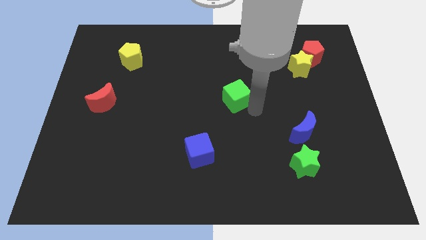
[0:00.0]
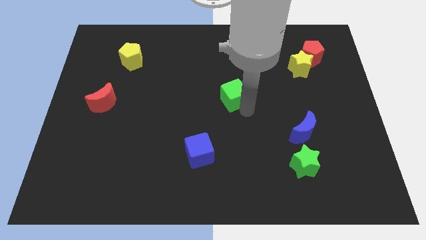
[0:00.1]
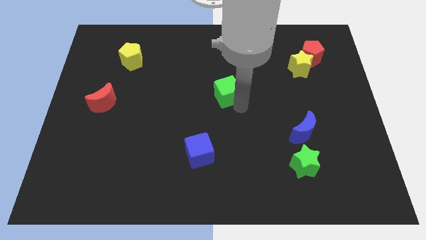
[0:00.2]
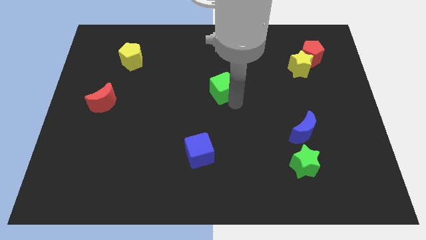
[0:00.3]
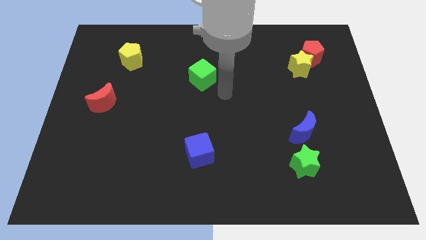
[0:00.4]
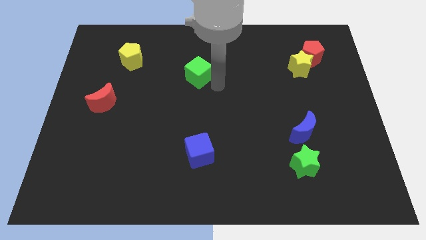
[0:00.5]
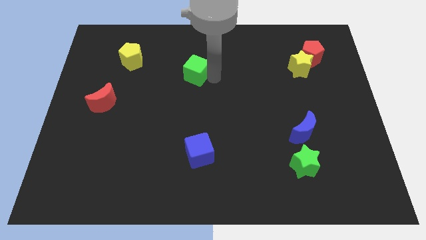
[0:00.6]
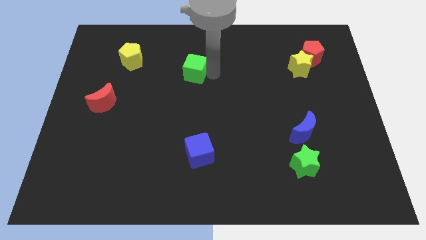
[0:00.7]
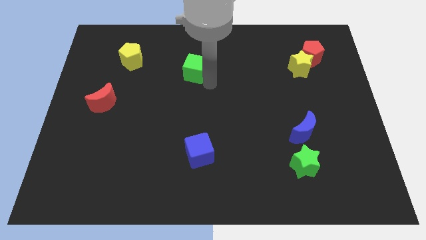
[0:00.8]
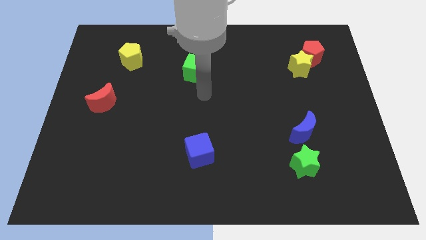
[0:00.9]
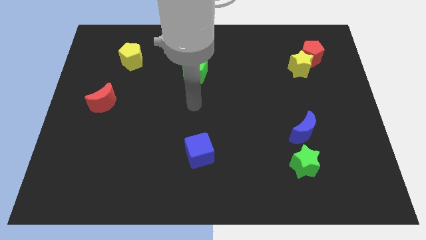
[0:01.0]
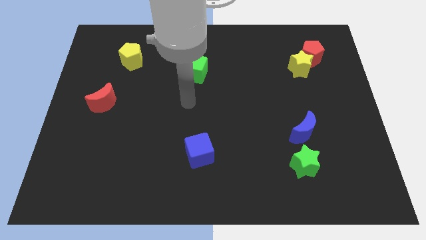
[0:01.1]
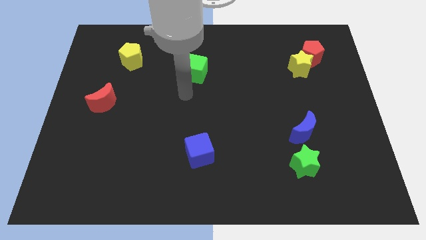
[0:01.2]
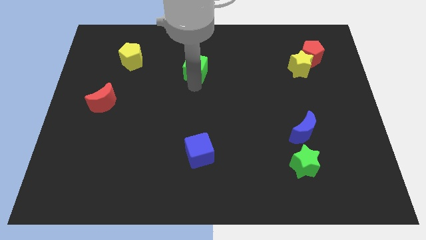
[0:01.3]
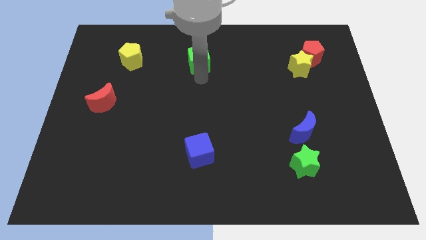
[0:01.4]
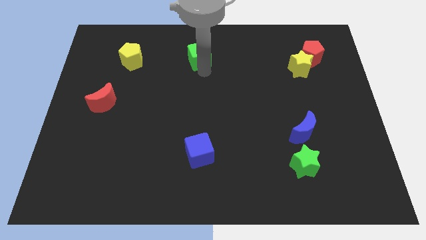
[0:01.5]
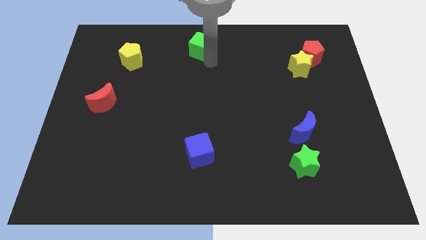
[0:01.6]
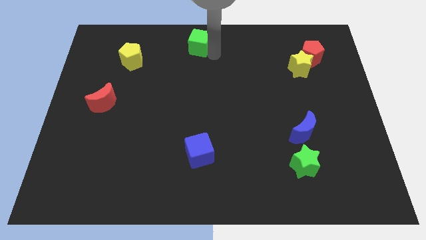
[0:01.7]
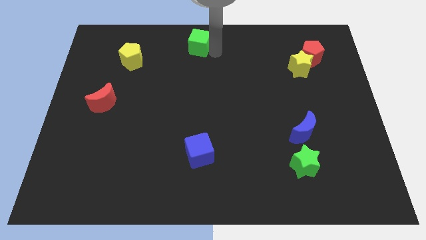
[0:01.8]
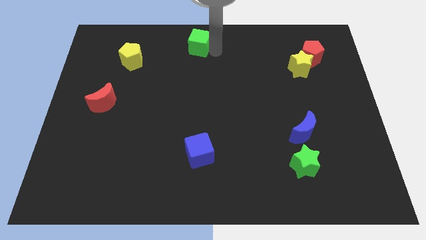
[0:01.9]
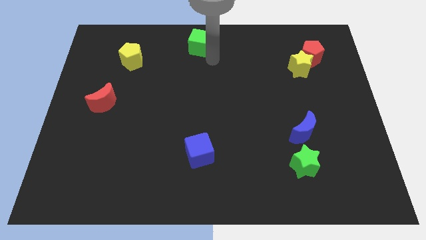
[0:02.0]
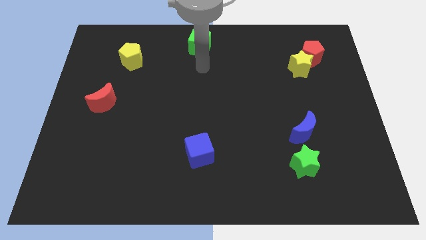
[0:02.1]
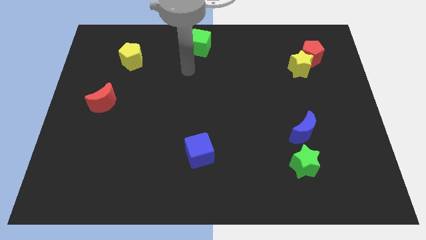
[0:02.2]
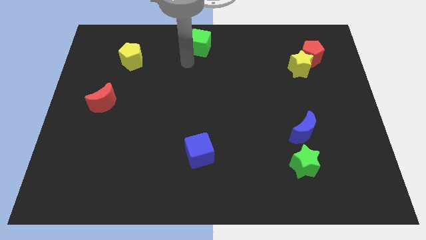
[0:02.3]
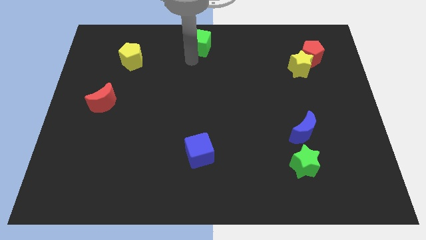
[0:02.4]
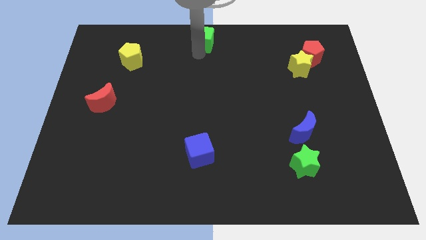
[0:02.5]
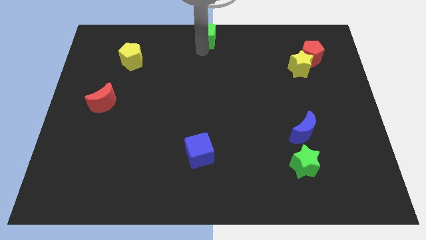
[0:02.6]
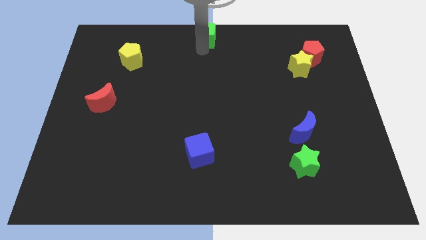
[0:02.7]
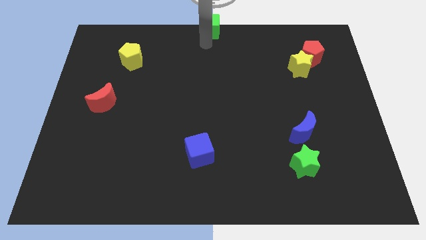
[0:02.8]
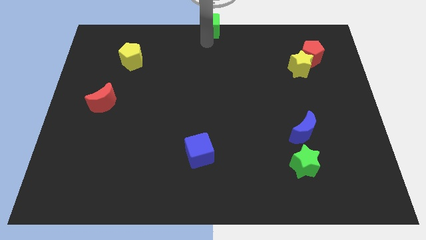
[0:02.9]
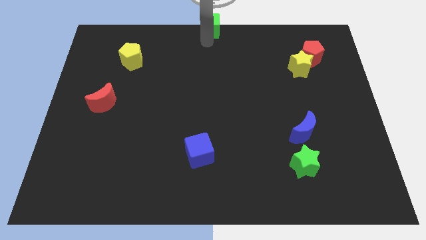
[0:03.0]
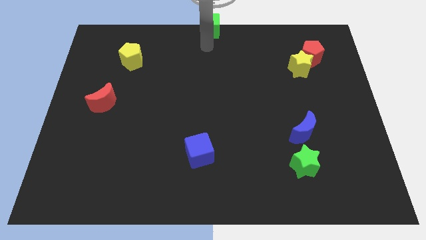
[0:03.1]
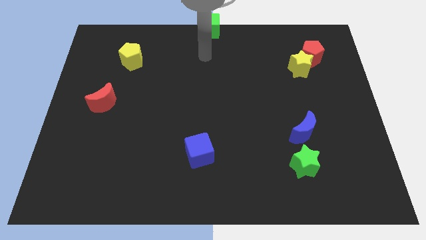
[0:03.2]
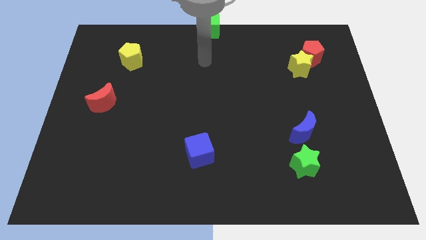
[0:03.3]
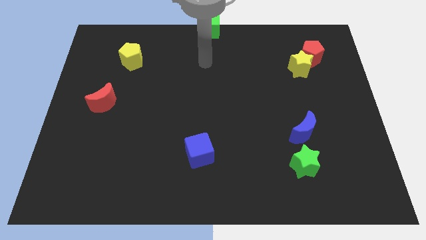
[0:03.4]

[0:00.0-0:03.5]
place the green cube to the center of the board

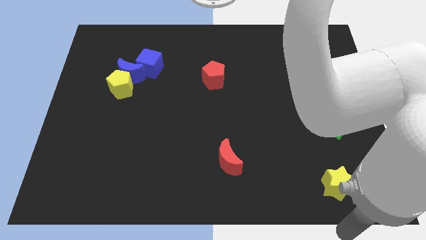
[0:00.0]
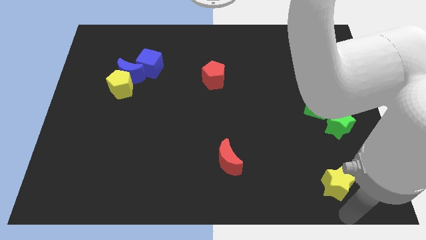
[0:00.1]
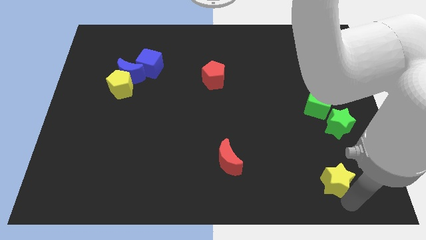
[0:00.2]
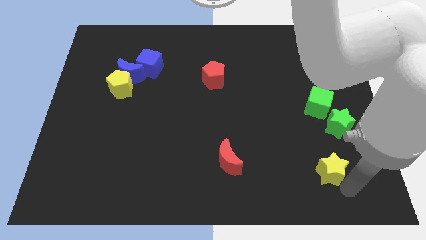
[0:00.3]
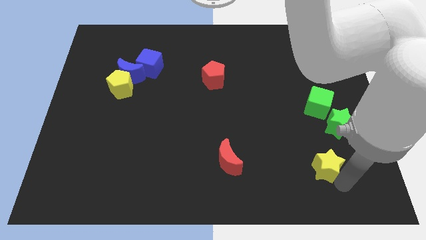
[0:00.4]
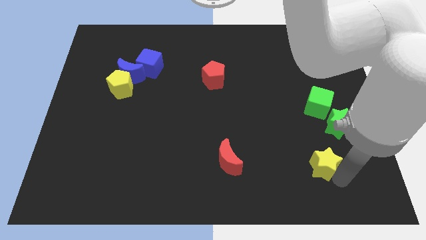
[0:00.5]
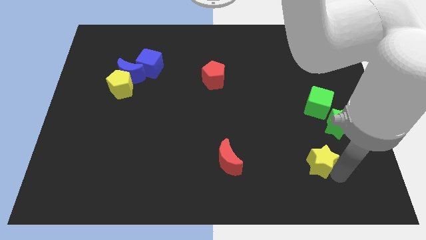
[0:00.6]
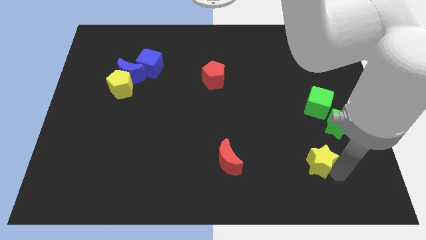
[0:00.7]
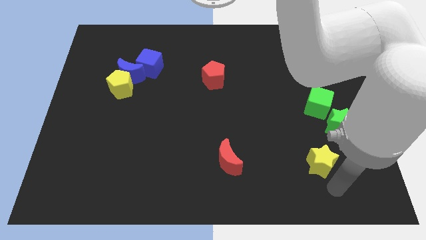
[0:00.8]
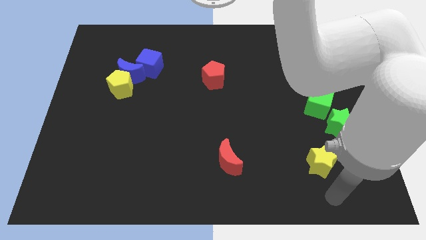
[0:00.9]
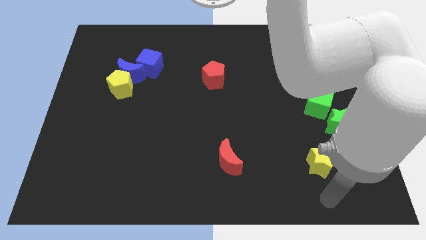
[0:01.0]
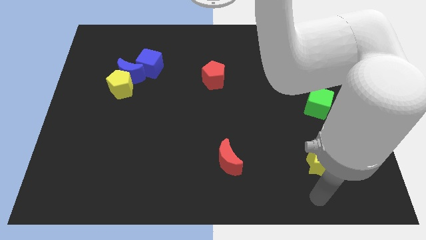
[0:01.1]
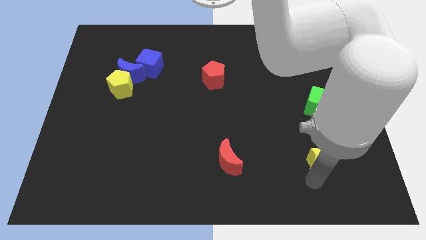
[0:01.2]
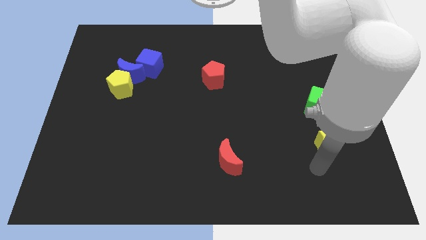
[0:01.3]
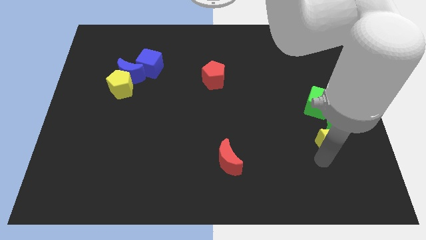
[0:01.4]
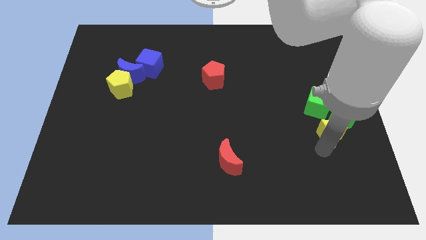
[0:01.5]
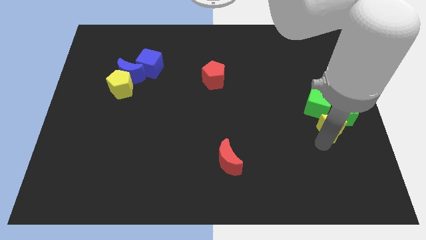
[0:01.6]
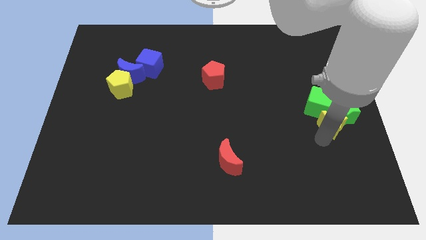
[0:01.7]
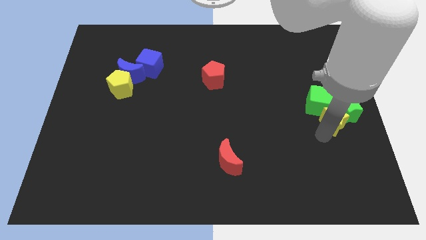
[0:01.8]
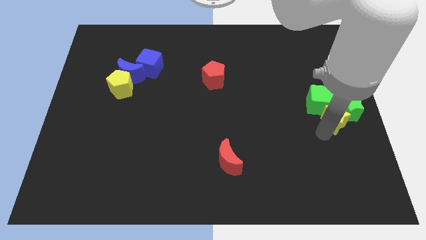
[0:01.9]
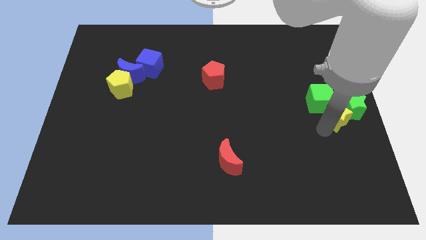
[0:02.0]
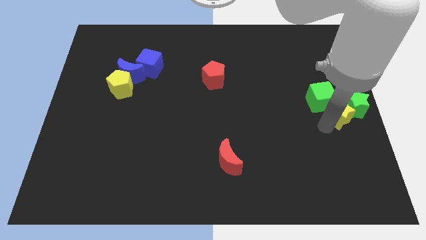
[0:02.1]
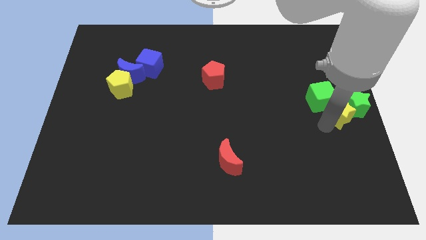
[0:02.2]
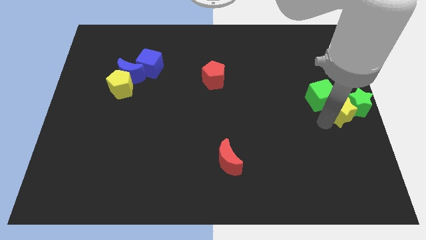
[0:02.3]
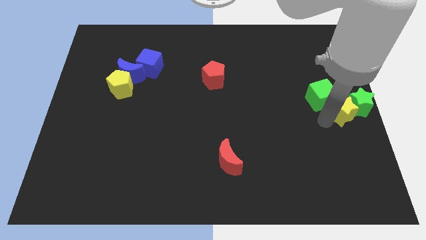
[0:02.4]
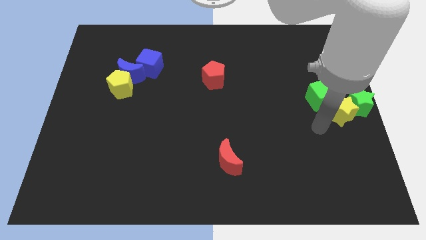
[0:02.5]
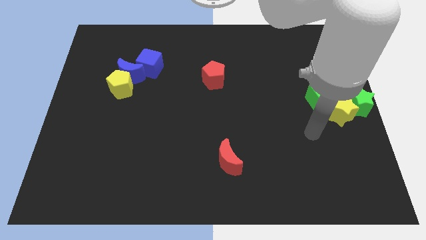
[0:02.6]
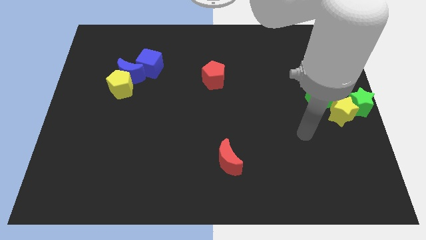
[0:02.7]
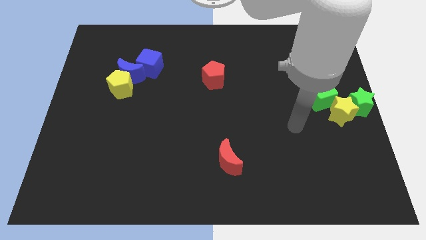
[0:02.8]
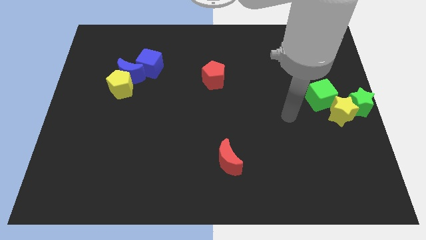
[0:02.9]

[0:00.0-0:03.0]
move yellow star into green star from bottom

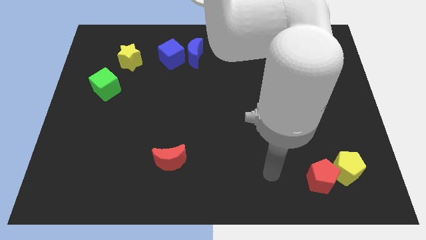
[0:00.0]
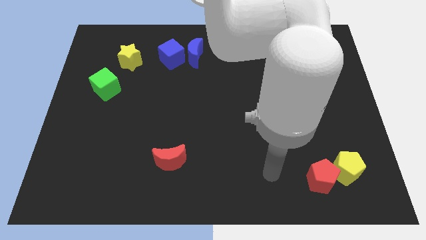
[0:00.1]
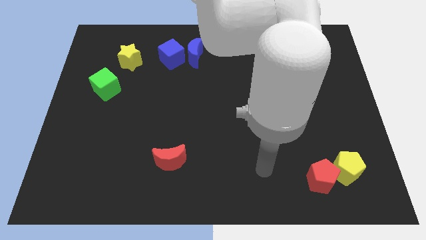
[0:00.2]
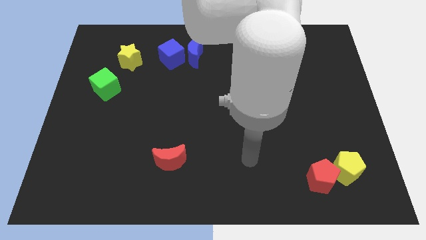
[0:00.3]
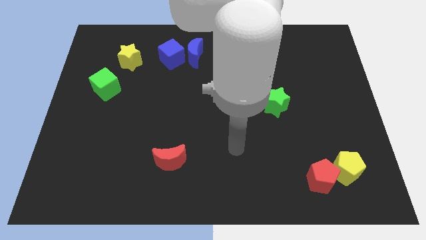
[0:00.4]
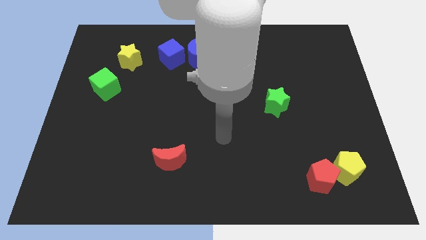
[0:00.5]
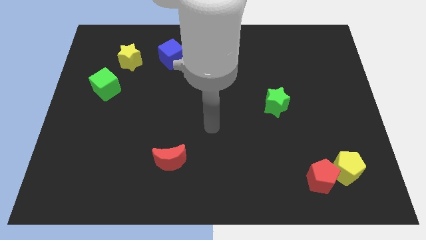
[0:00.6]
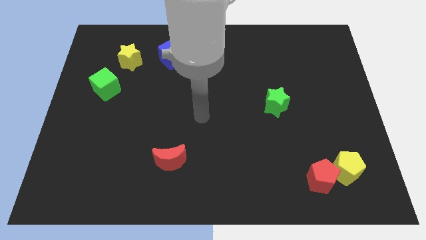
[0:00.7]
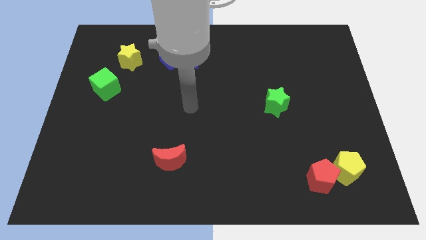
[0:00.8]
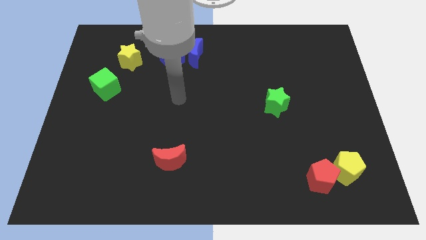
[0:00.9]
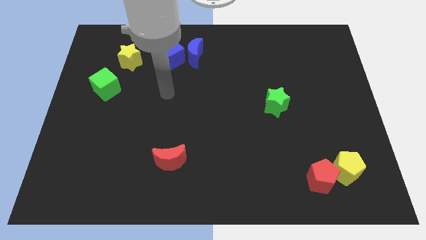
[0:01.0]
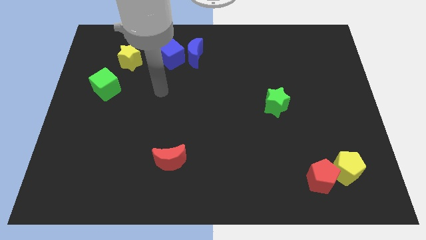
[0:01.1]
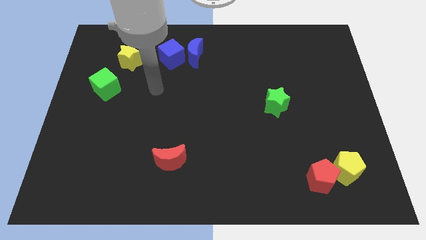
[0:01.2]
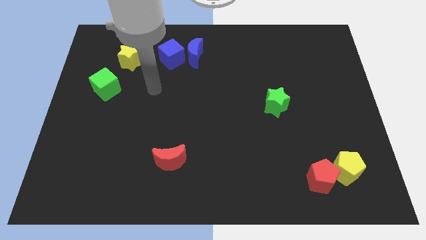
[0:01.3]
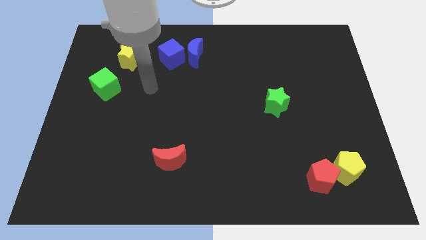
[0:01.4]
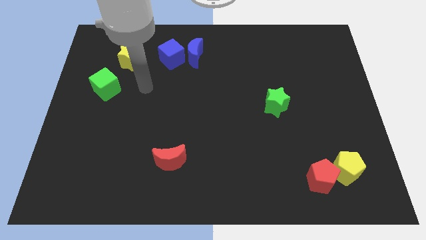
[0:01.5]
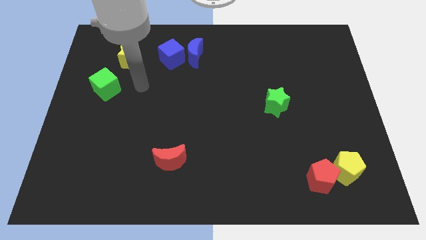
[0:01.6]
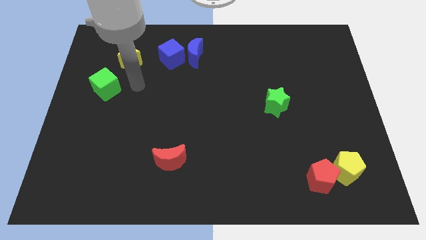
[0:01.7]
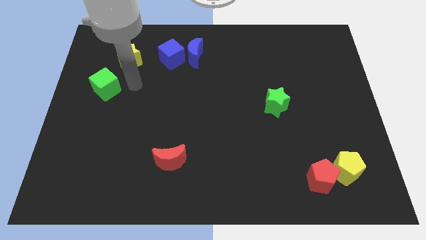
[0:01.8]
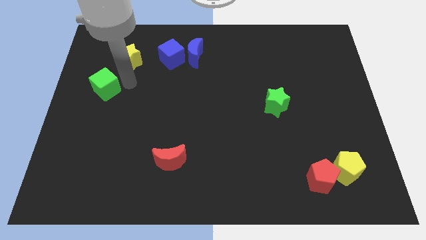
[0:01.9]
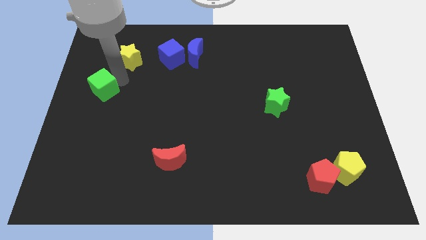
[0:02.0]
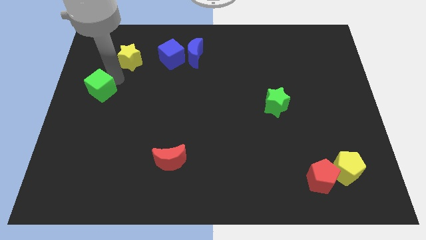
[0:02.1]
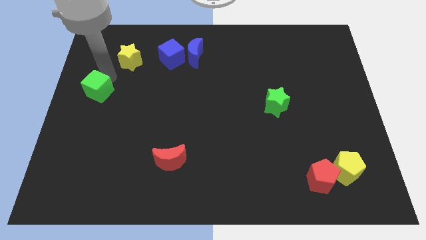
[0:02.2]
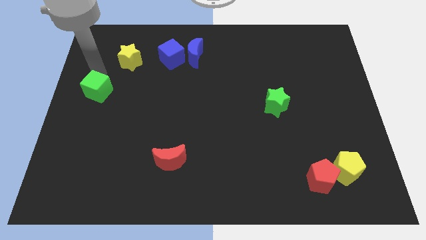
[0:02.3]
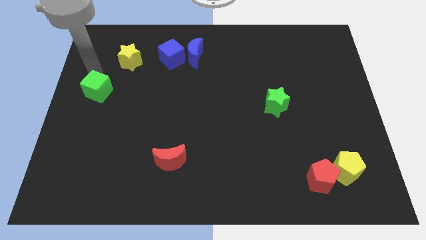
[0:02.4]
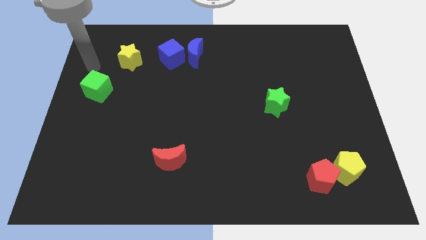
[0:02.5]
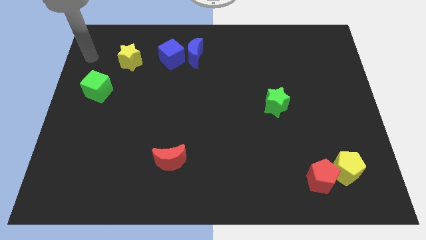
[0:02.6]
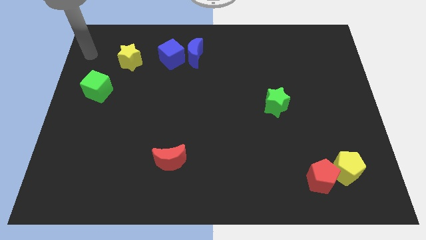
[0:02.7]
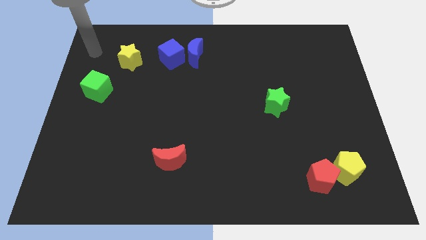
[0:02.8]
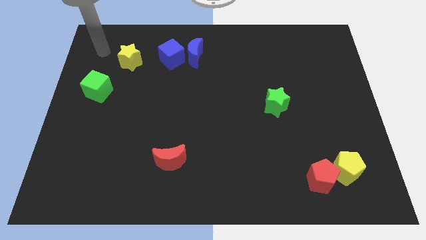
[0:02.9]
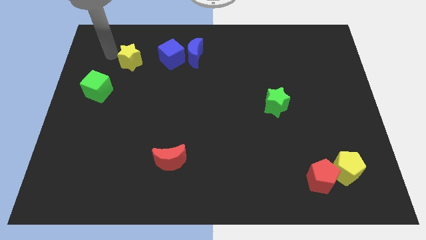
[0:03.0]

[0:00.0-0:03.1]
push the green cube slightly to the left
